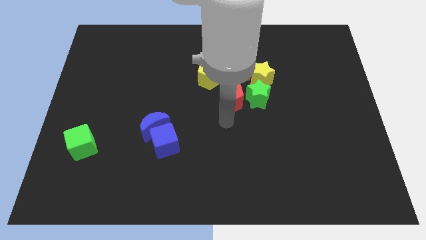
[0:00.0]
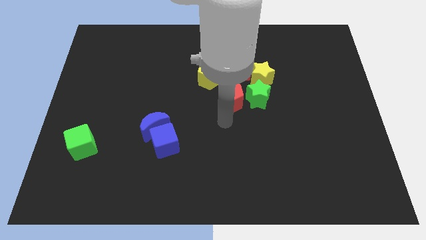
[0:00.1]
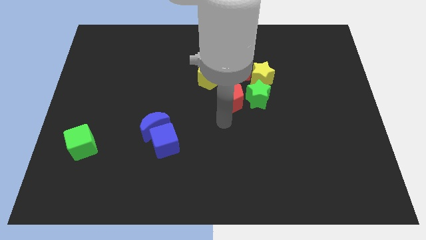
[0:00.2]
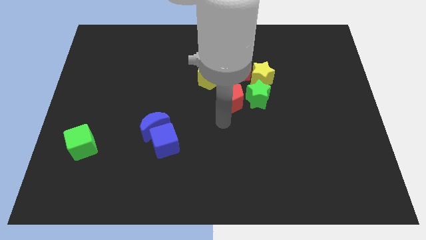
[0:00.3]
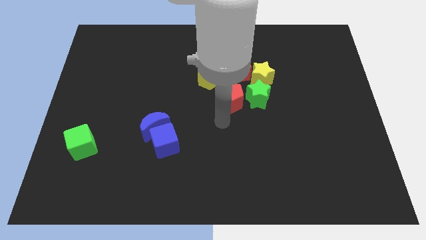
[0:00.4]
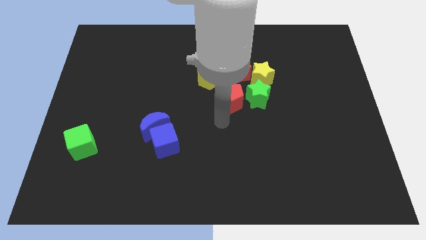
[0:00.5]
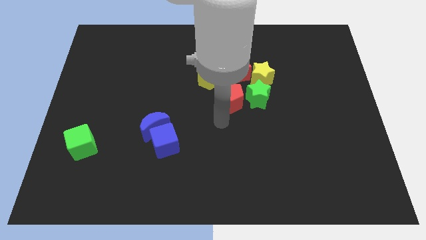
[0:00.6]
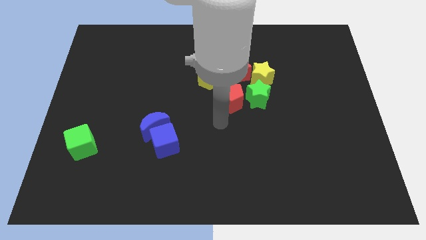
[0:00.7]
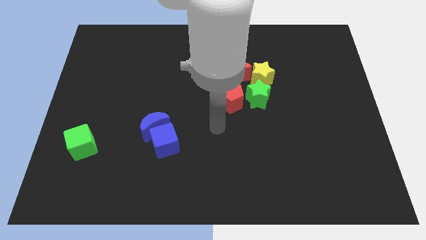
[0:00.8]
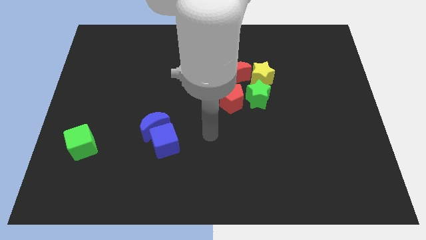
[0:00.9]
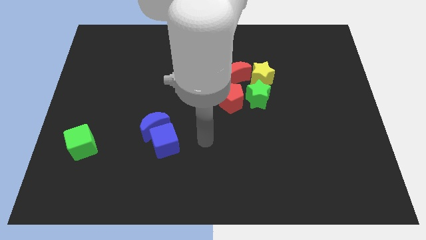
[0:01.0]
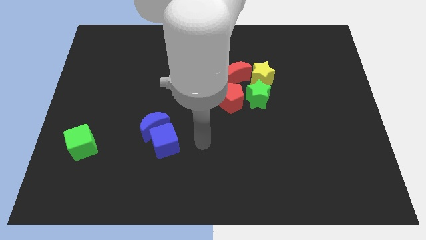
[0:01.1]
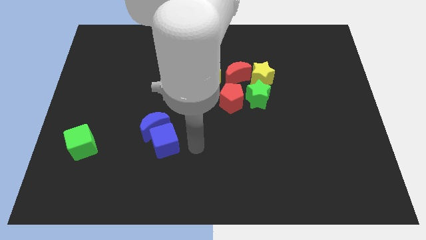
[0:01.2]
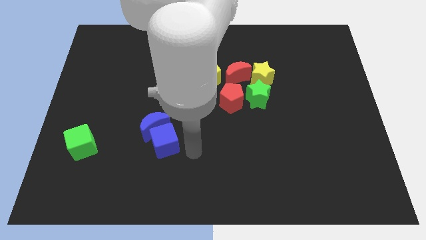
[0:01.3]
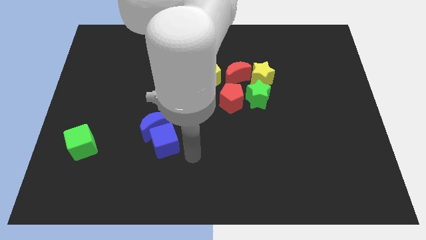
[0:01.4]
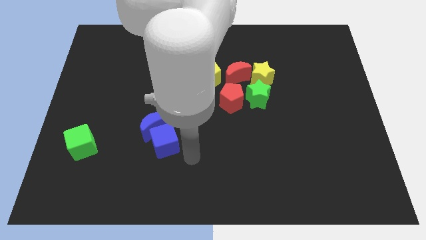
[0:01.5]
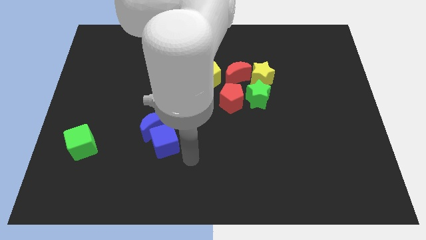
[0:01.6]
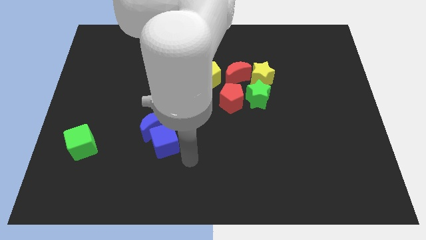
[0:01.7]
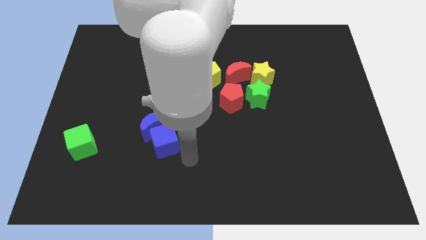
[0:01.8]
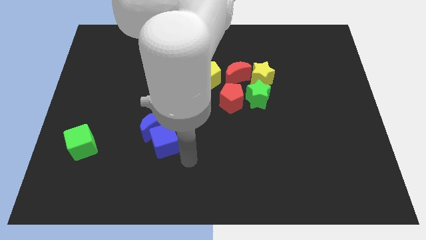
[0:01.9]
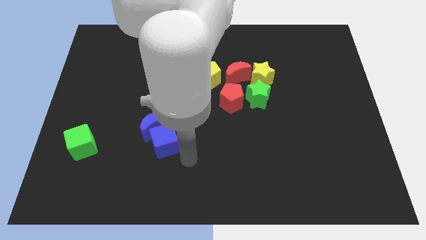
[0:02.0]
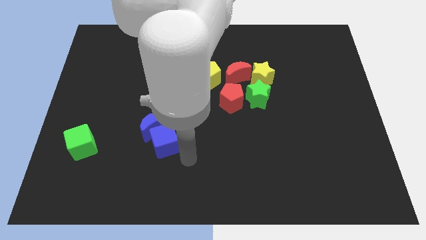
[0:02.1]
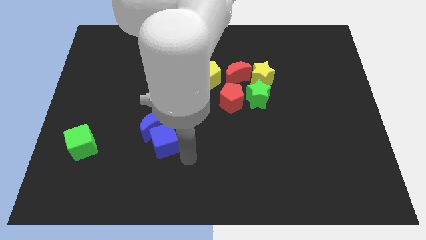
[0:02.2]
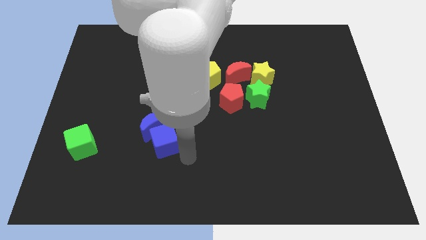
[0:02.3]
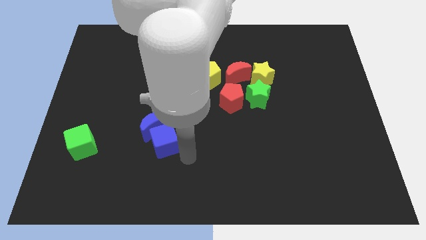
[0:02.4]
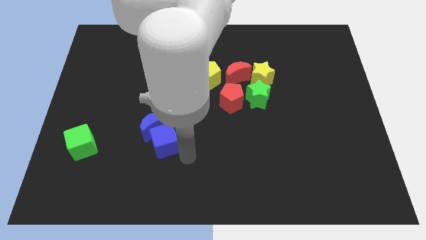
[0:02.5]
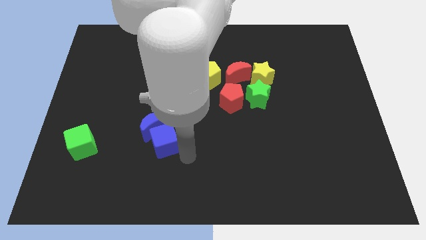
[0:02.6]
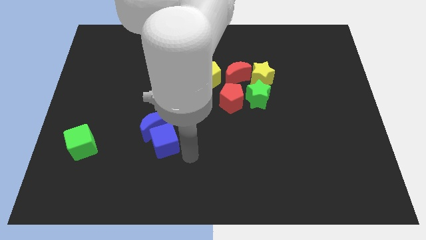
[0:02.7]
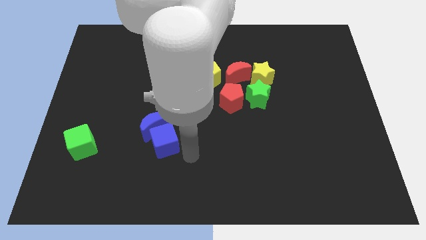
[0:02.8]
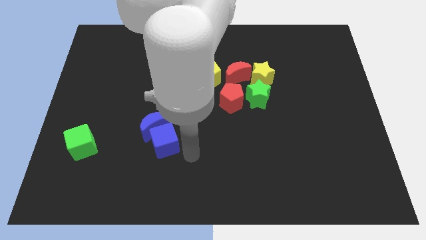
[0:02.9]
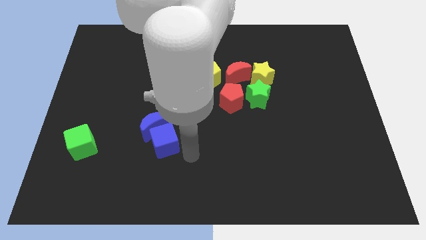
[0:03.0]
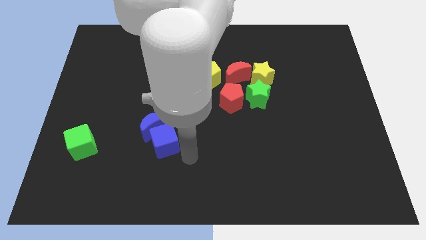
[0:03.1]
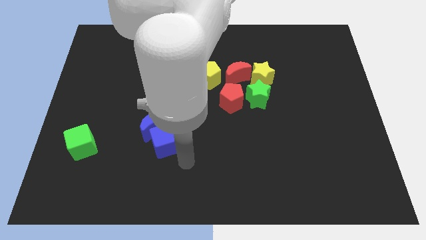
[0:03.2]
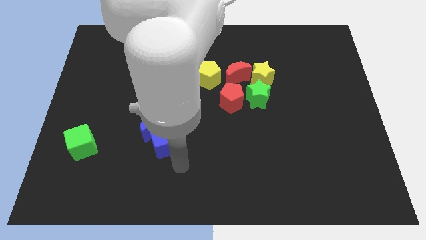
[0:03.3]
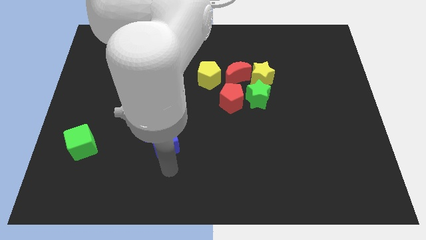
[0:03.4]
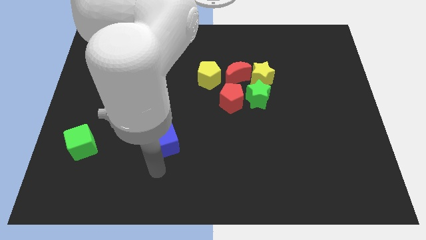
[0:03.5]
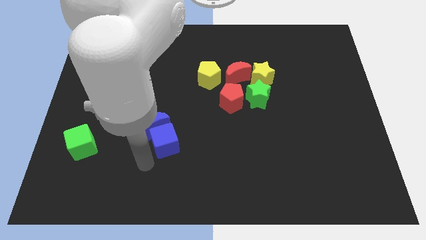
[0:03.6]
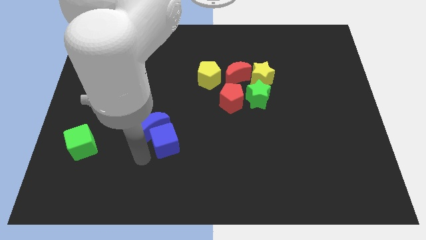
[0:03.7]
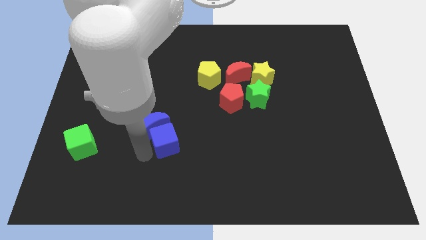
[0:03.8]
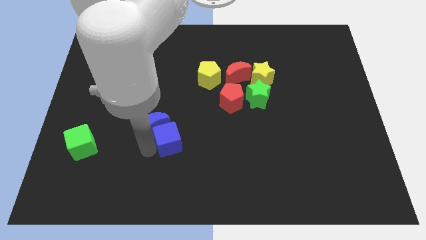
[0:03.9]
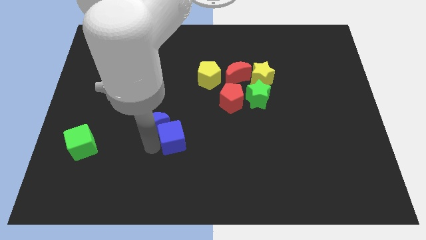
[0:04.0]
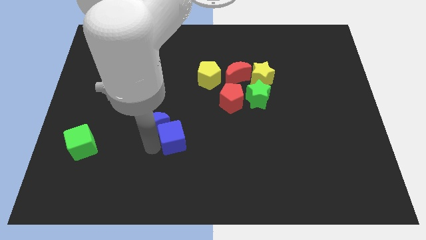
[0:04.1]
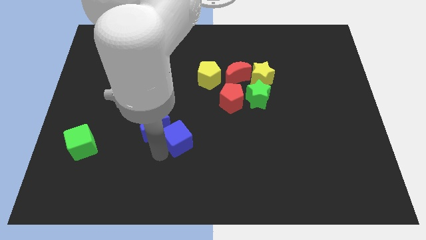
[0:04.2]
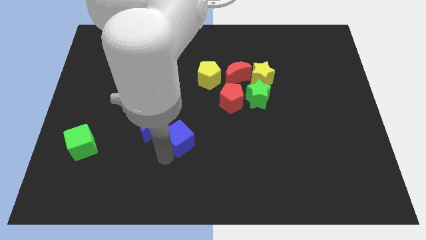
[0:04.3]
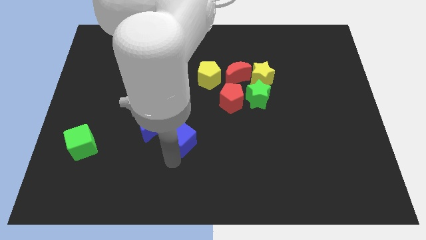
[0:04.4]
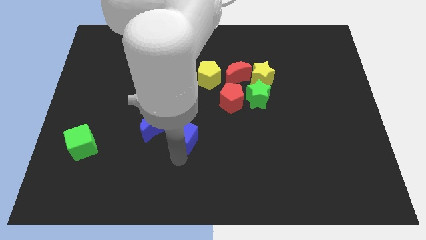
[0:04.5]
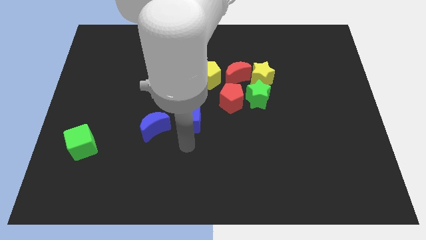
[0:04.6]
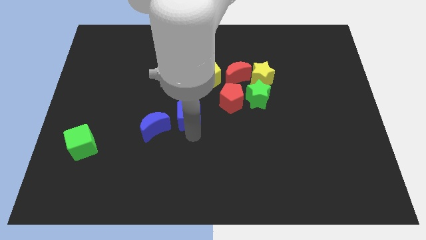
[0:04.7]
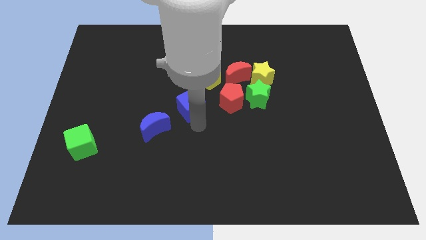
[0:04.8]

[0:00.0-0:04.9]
separate the blue cube from blue moon

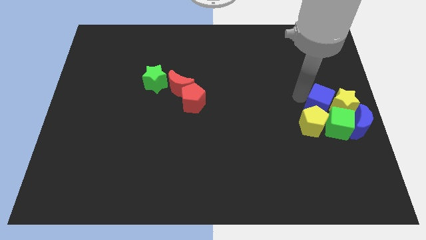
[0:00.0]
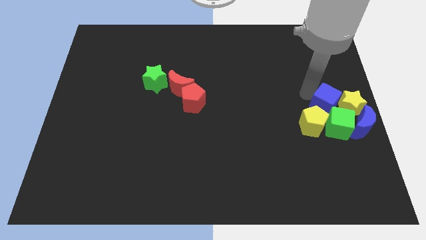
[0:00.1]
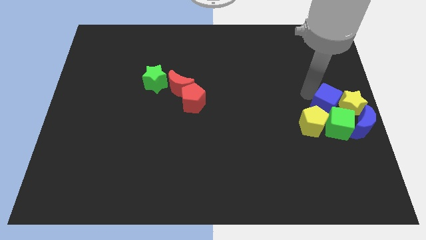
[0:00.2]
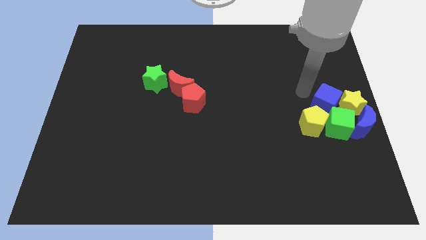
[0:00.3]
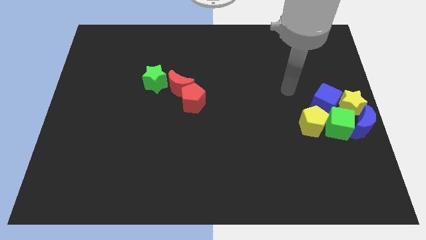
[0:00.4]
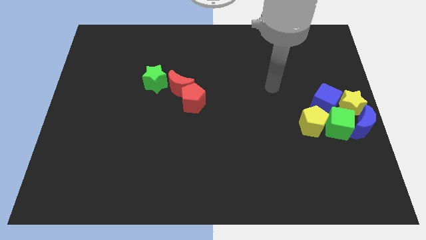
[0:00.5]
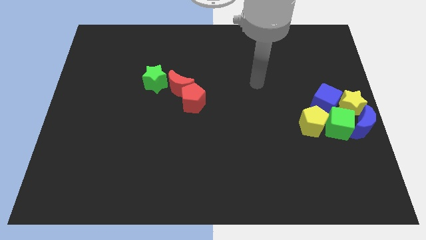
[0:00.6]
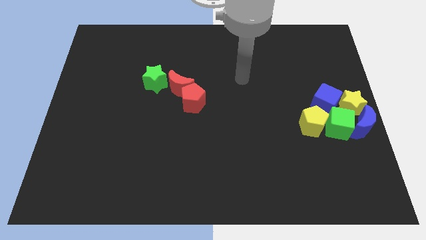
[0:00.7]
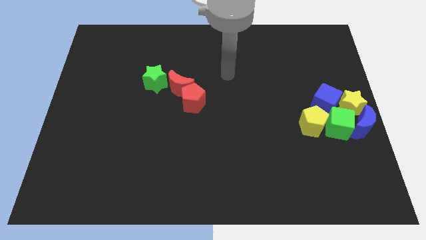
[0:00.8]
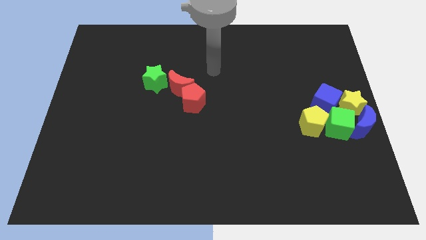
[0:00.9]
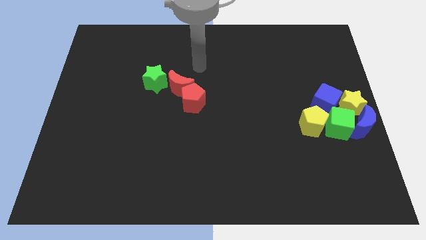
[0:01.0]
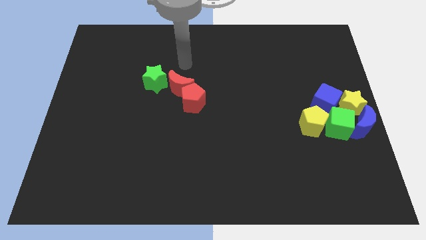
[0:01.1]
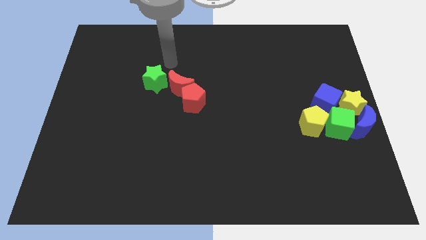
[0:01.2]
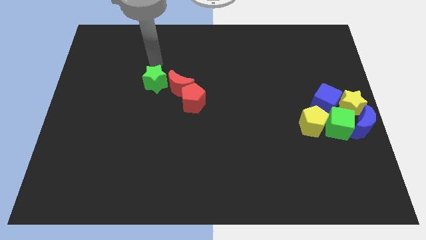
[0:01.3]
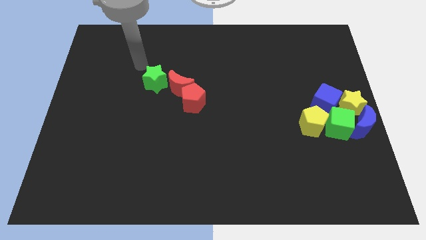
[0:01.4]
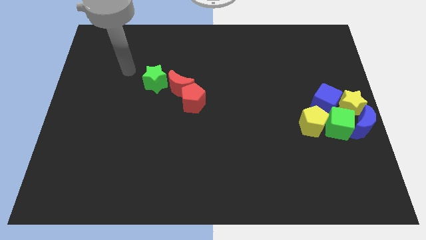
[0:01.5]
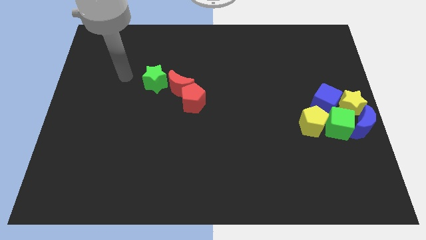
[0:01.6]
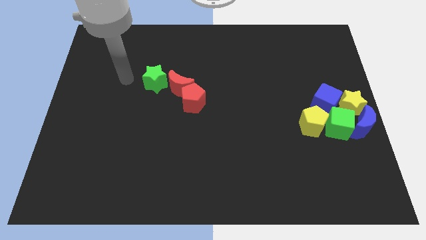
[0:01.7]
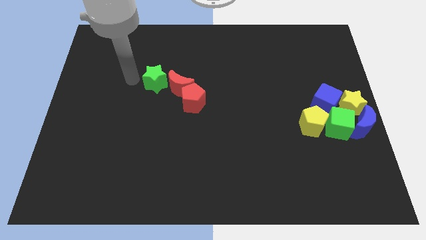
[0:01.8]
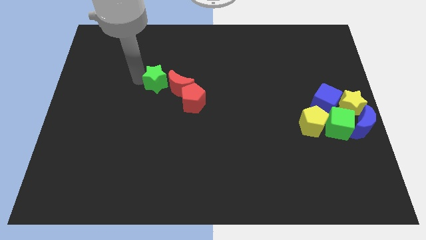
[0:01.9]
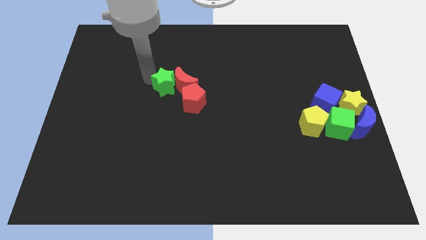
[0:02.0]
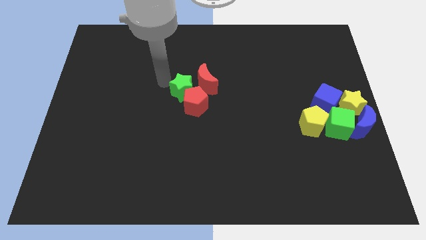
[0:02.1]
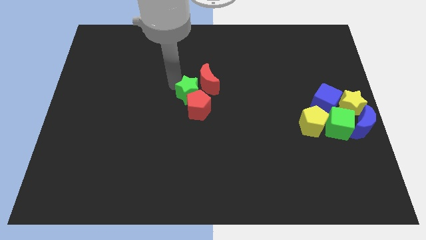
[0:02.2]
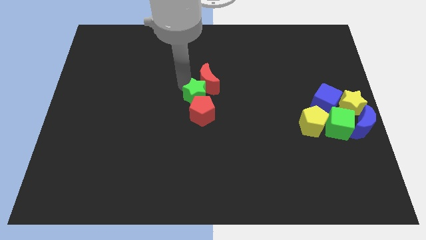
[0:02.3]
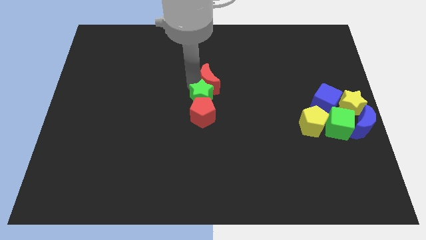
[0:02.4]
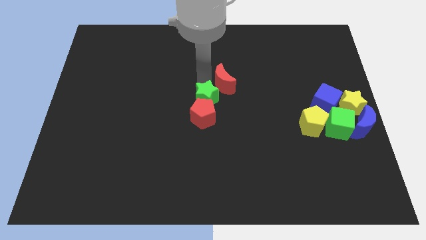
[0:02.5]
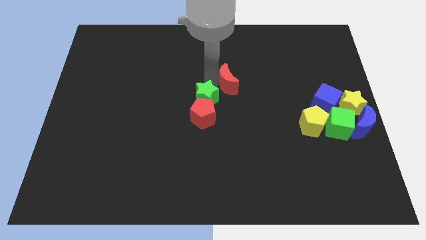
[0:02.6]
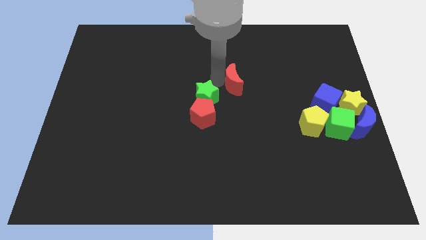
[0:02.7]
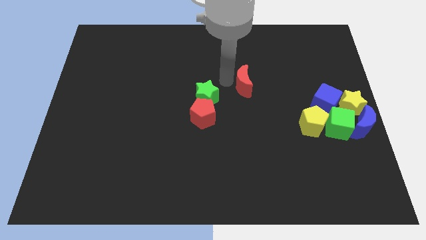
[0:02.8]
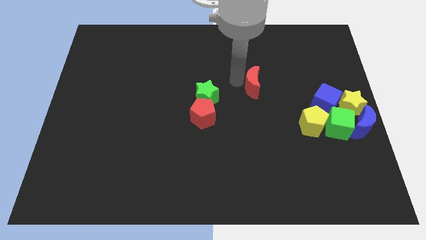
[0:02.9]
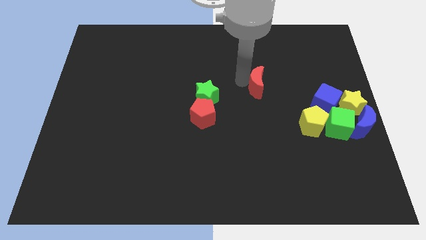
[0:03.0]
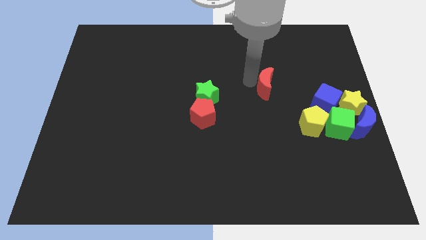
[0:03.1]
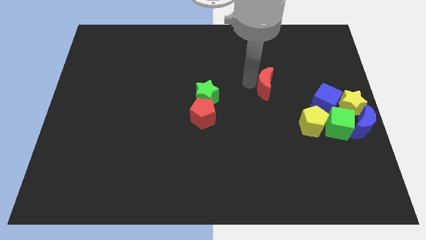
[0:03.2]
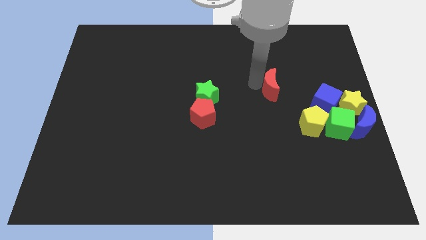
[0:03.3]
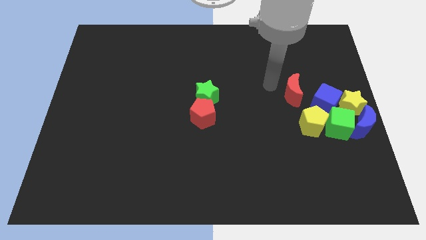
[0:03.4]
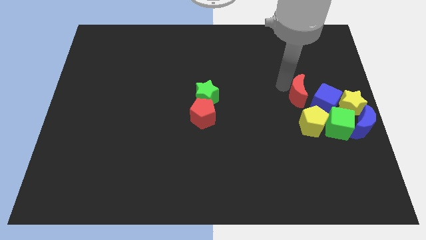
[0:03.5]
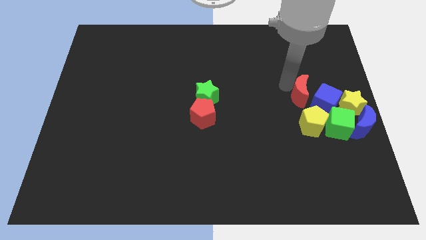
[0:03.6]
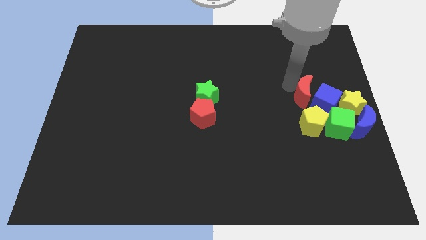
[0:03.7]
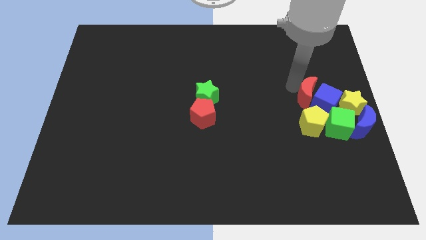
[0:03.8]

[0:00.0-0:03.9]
push red crescent beside blue cube

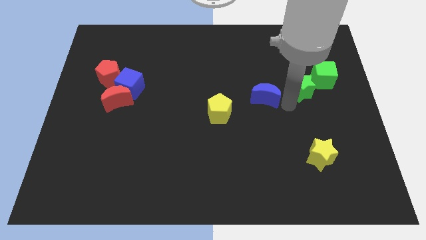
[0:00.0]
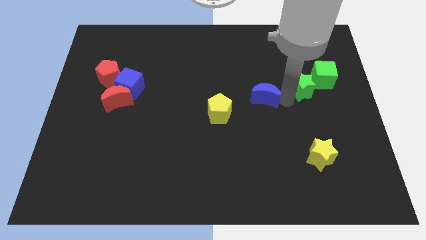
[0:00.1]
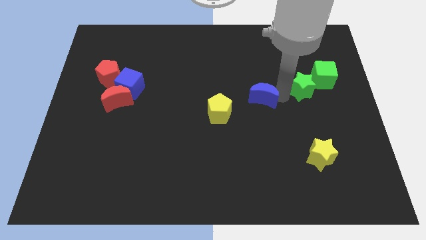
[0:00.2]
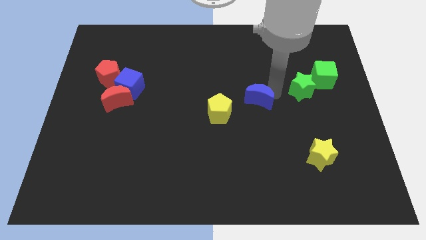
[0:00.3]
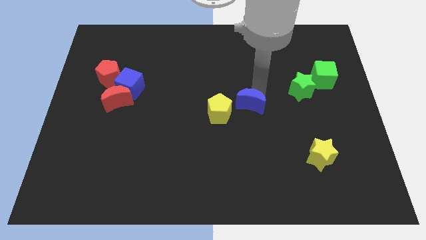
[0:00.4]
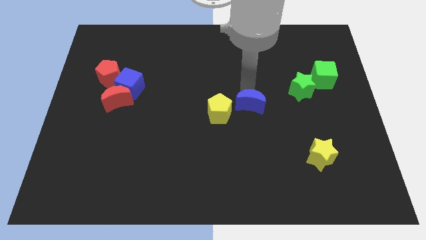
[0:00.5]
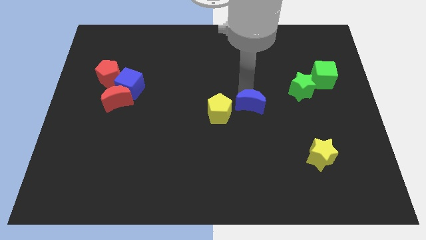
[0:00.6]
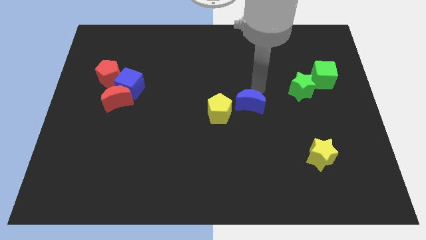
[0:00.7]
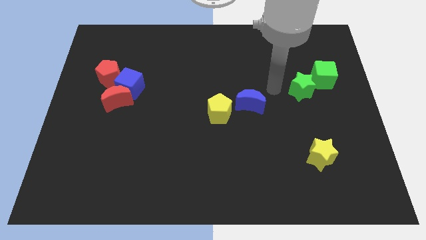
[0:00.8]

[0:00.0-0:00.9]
slightly push the blue moon close to the yellow pentagon
